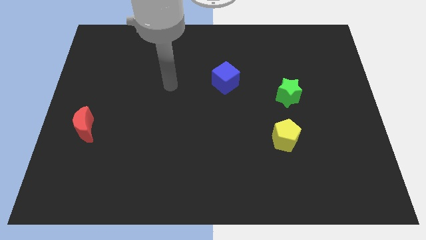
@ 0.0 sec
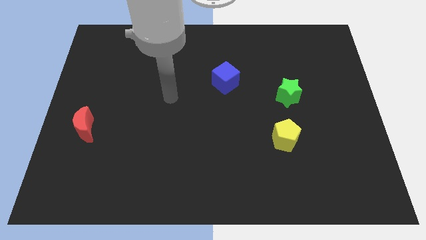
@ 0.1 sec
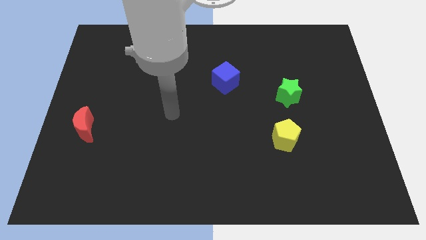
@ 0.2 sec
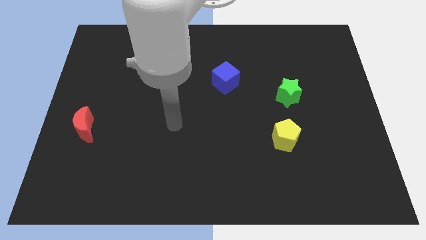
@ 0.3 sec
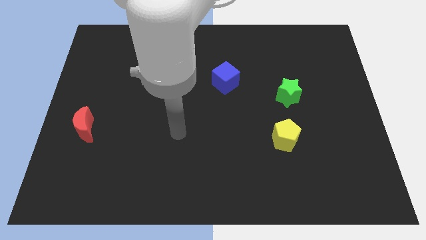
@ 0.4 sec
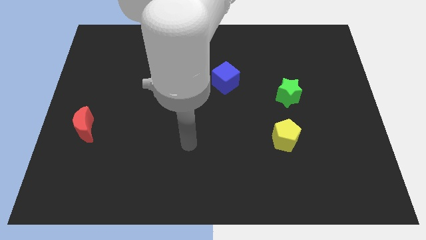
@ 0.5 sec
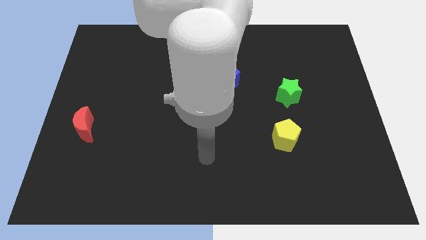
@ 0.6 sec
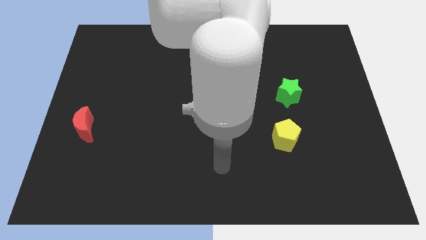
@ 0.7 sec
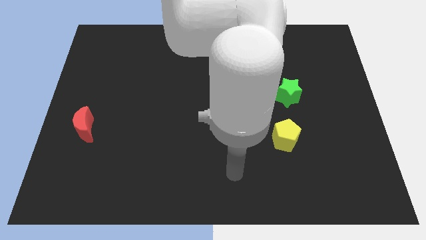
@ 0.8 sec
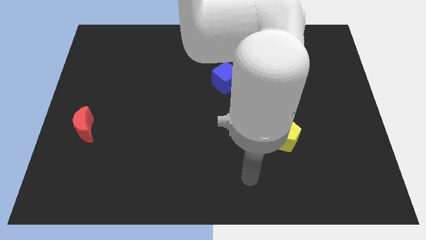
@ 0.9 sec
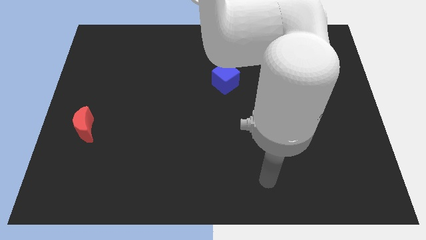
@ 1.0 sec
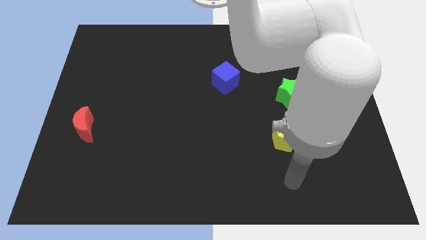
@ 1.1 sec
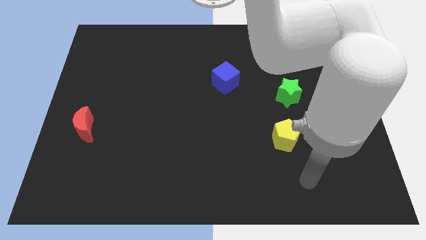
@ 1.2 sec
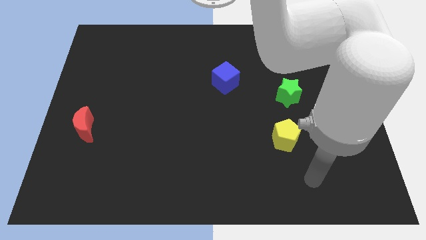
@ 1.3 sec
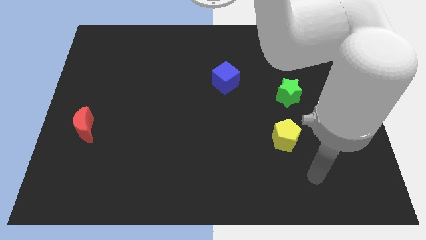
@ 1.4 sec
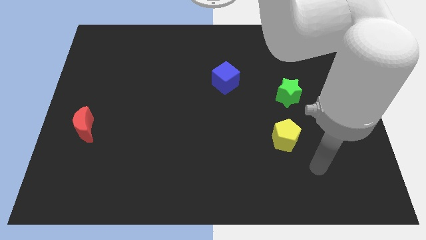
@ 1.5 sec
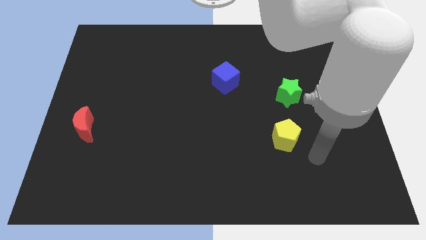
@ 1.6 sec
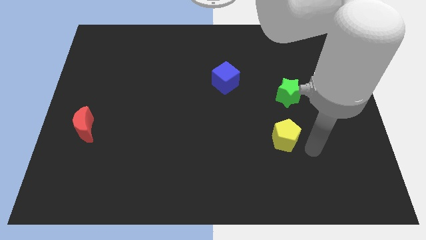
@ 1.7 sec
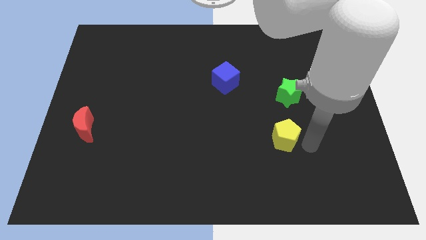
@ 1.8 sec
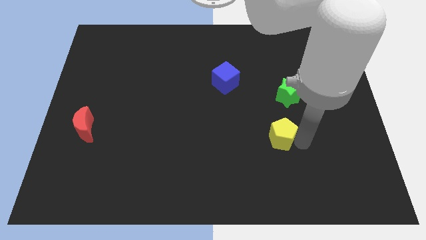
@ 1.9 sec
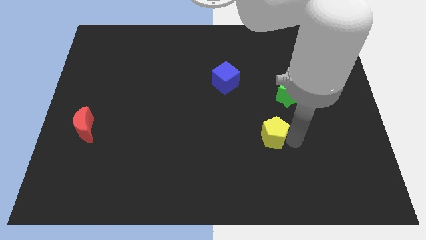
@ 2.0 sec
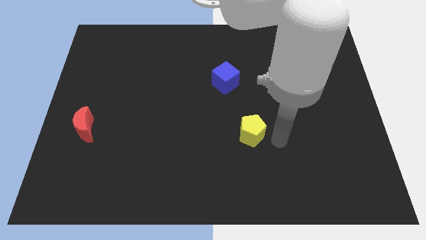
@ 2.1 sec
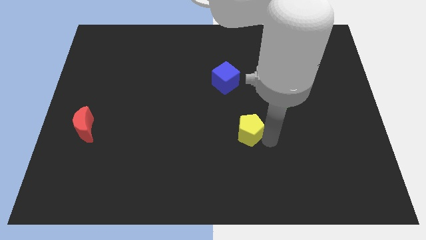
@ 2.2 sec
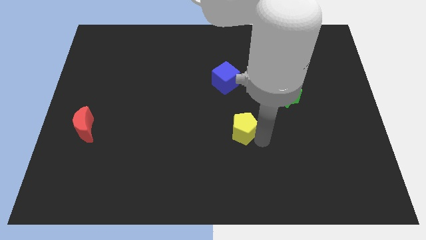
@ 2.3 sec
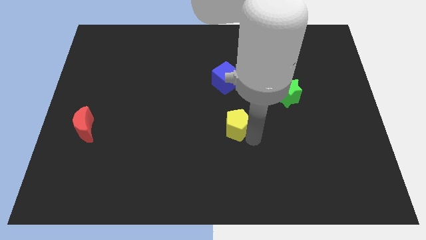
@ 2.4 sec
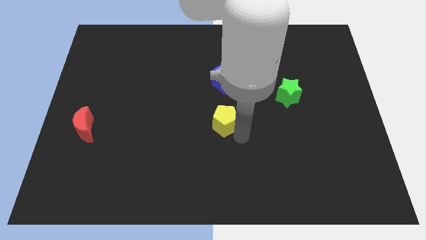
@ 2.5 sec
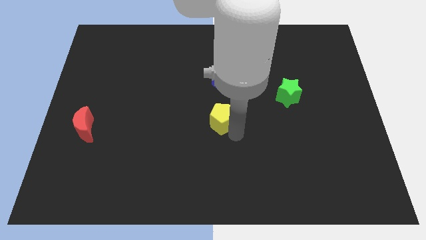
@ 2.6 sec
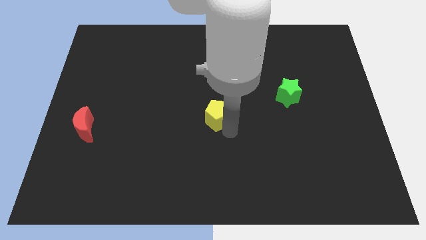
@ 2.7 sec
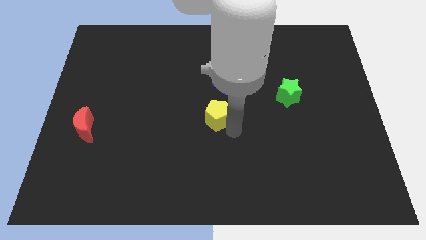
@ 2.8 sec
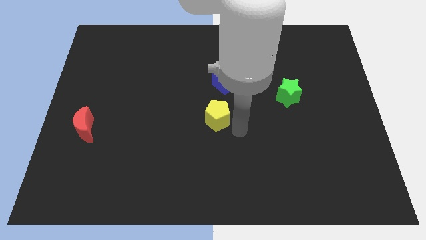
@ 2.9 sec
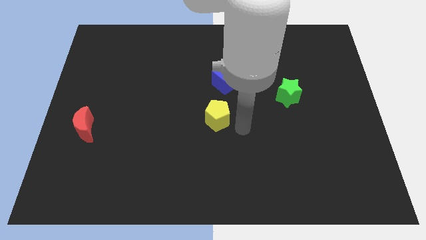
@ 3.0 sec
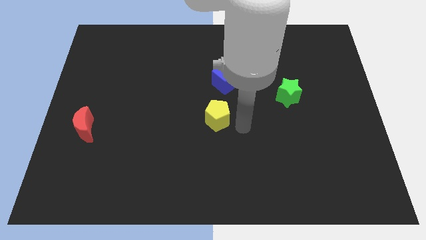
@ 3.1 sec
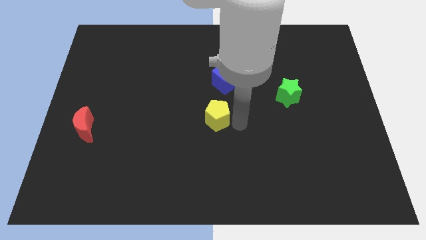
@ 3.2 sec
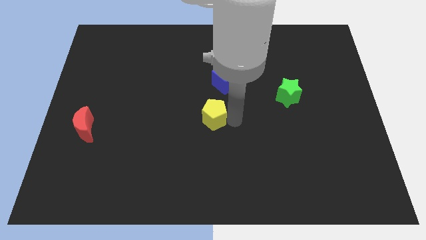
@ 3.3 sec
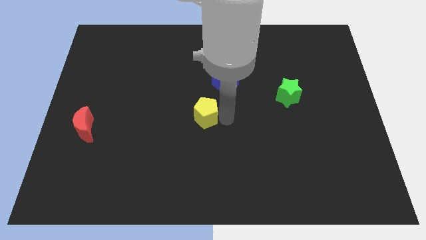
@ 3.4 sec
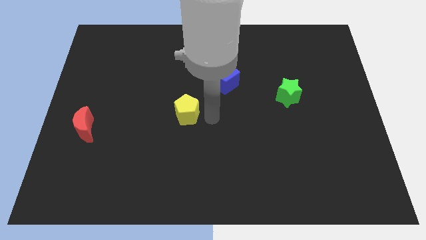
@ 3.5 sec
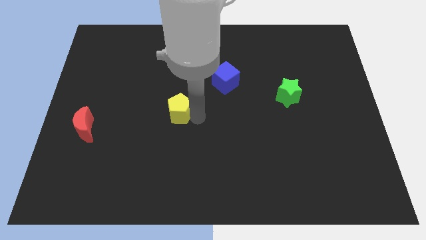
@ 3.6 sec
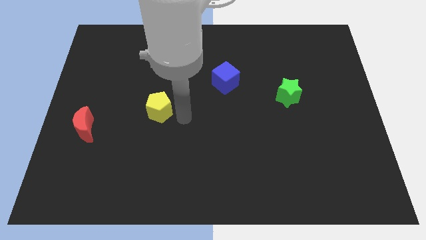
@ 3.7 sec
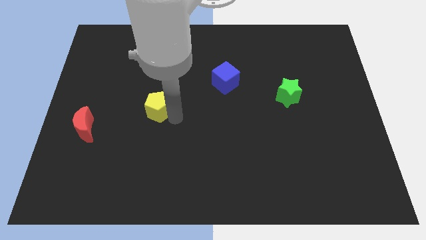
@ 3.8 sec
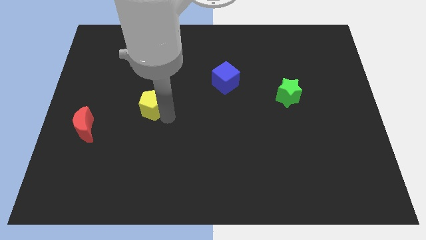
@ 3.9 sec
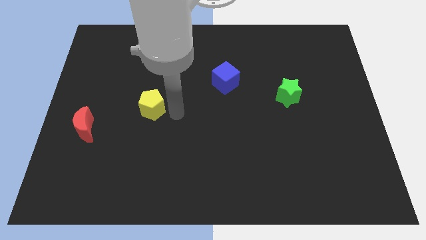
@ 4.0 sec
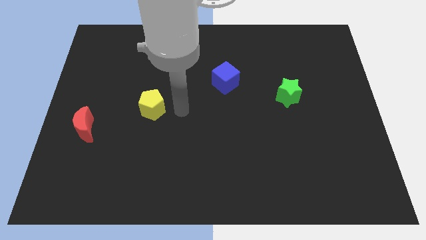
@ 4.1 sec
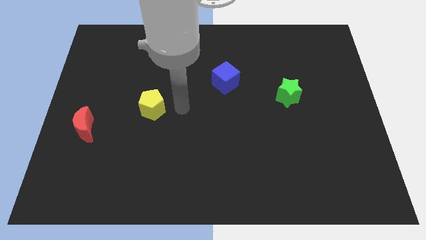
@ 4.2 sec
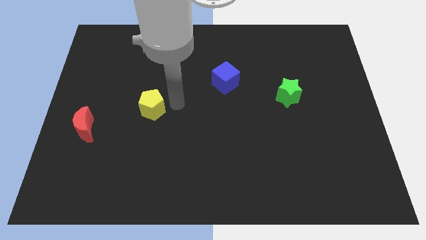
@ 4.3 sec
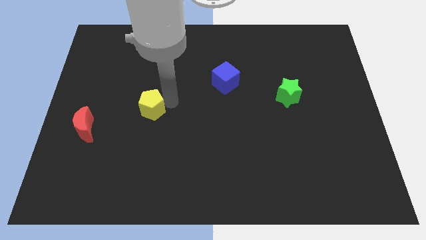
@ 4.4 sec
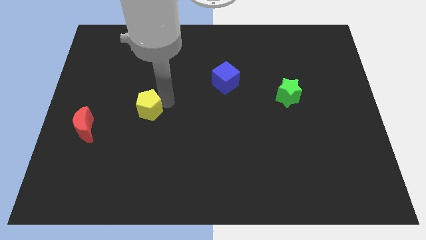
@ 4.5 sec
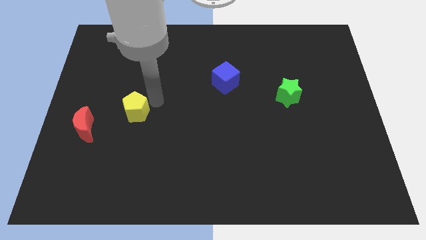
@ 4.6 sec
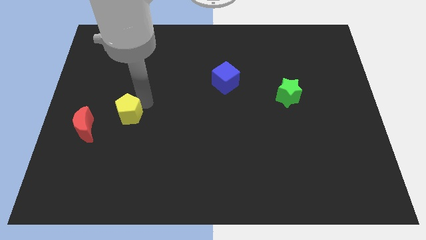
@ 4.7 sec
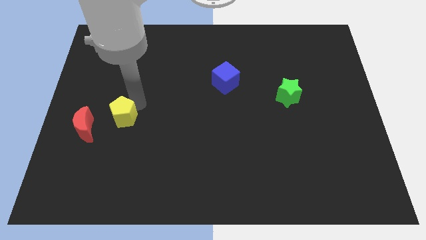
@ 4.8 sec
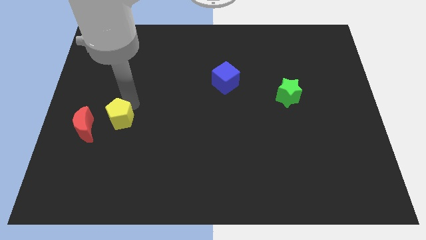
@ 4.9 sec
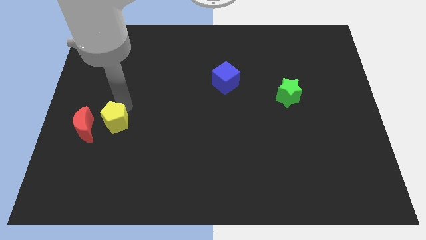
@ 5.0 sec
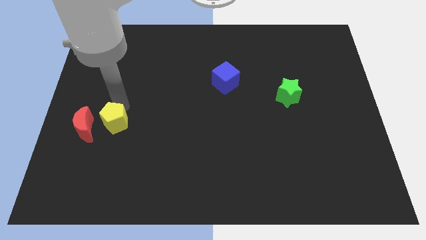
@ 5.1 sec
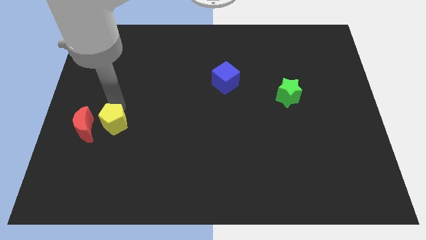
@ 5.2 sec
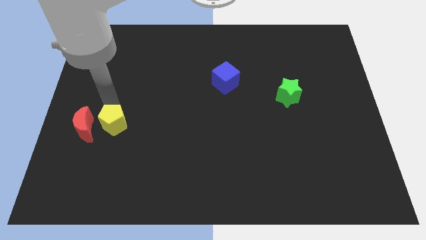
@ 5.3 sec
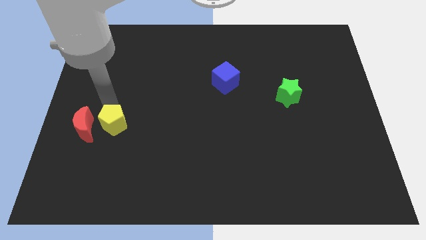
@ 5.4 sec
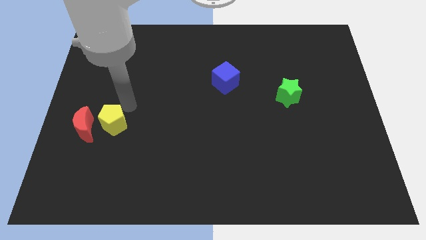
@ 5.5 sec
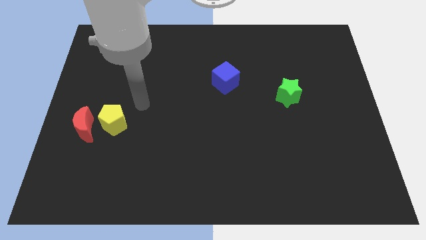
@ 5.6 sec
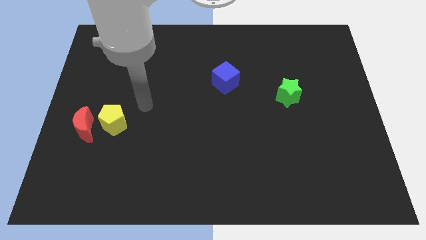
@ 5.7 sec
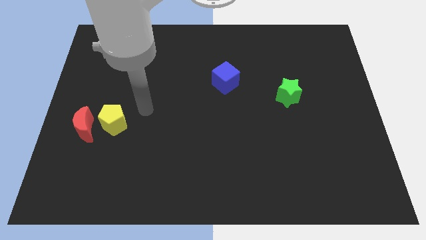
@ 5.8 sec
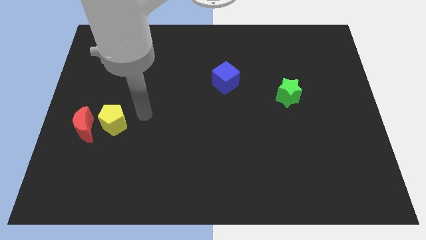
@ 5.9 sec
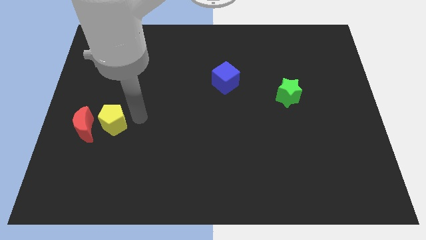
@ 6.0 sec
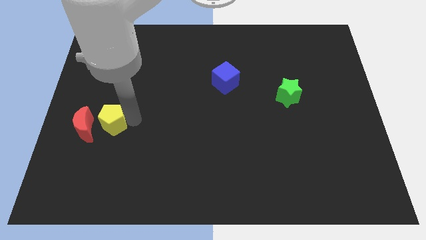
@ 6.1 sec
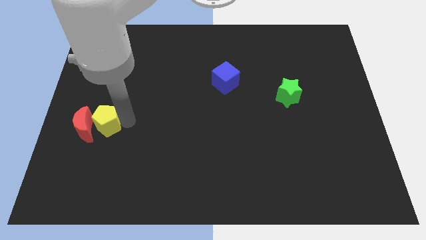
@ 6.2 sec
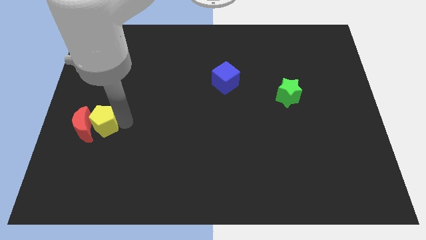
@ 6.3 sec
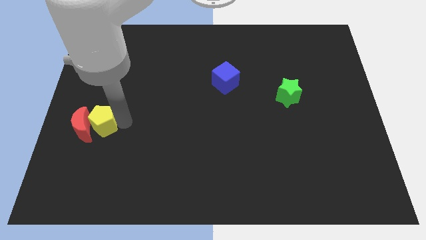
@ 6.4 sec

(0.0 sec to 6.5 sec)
slide the yellow block next to the red block

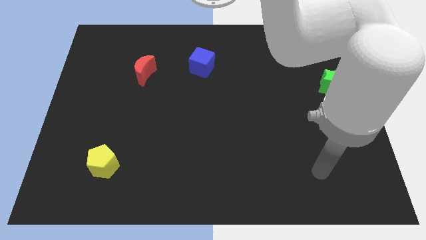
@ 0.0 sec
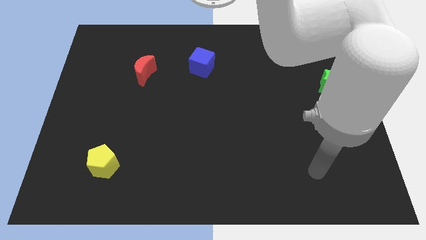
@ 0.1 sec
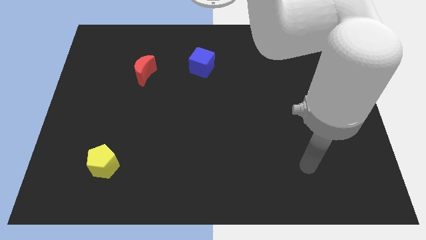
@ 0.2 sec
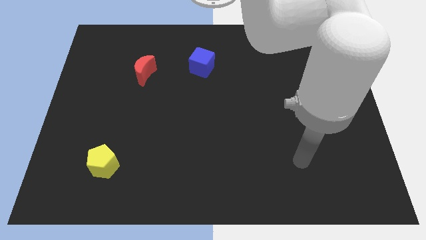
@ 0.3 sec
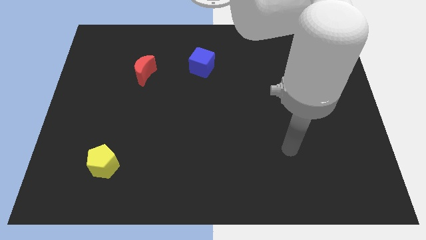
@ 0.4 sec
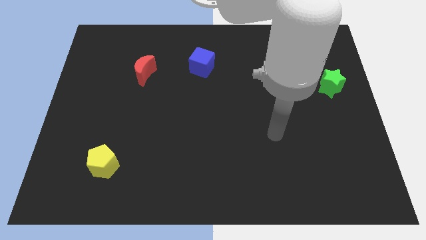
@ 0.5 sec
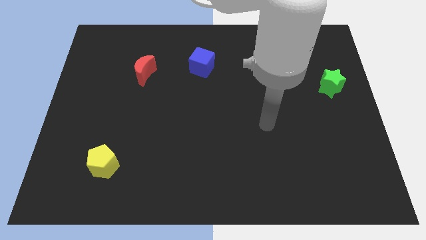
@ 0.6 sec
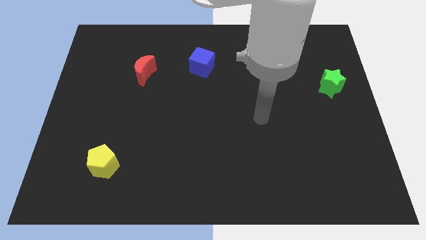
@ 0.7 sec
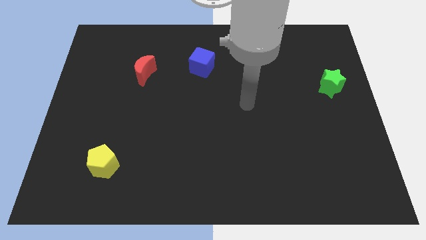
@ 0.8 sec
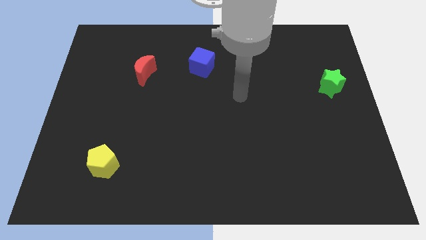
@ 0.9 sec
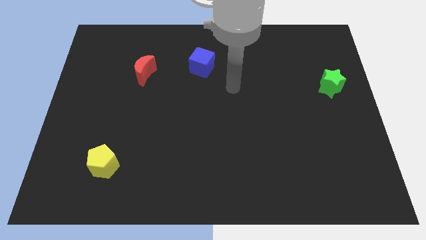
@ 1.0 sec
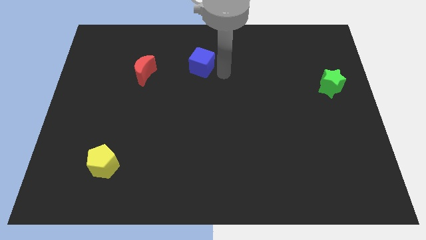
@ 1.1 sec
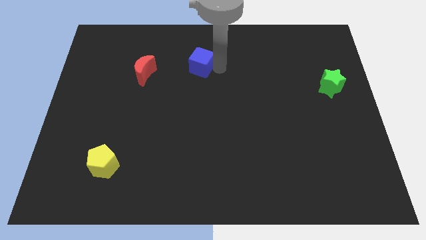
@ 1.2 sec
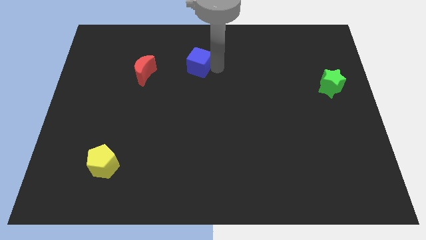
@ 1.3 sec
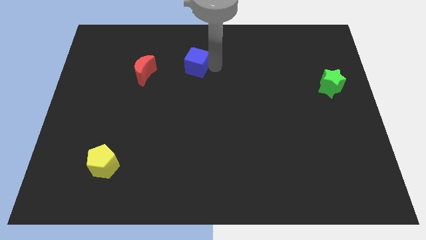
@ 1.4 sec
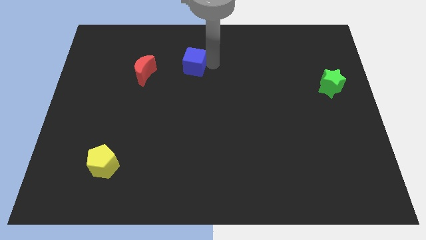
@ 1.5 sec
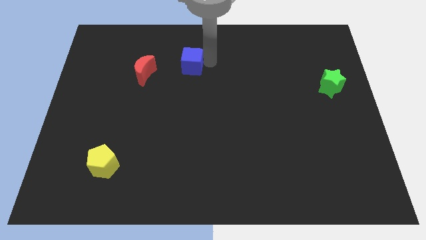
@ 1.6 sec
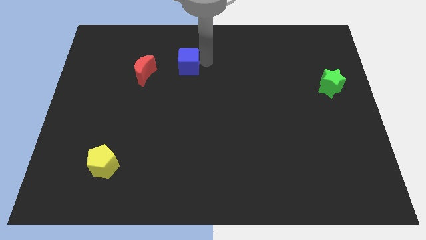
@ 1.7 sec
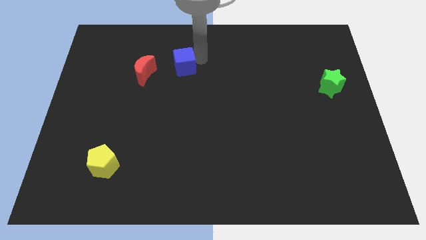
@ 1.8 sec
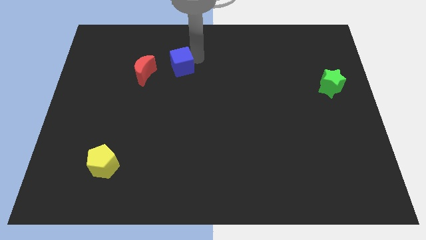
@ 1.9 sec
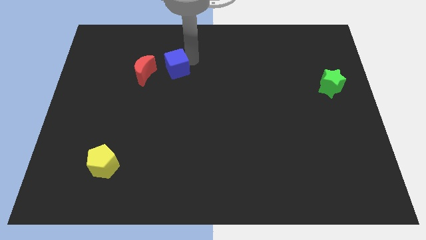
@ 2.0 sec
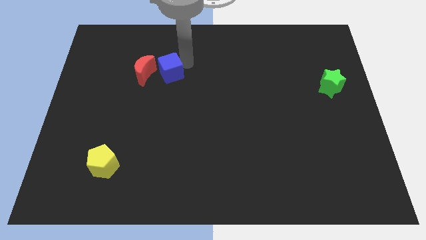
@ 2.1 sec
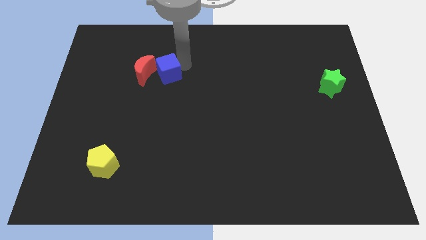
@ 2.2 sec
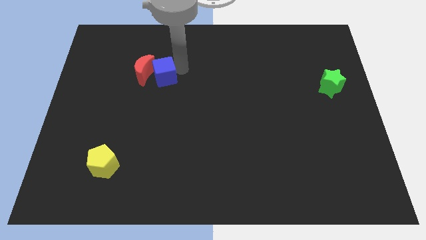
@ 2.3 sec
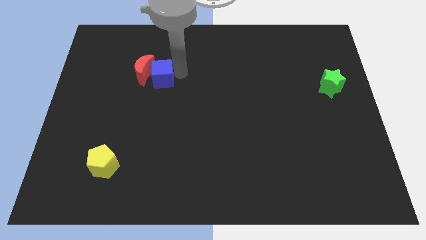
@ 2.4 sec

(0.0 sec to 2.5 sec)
push the cube towards the red block
